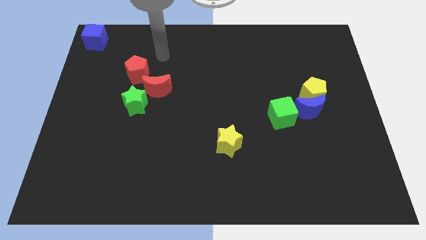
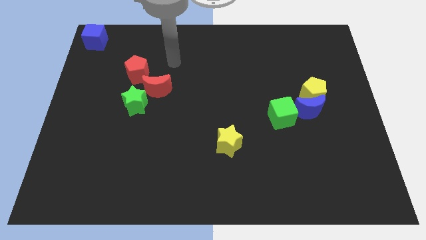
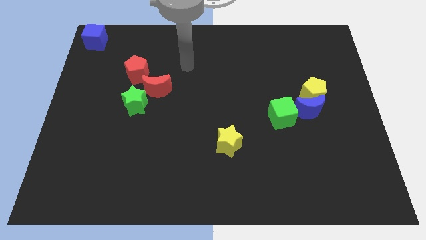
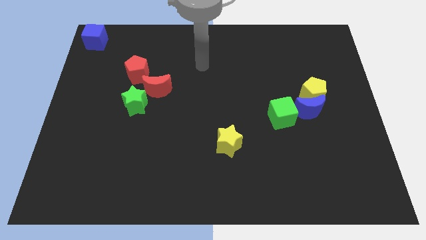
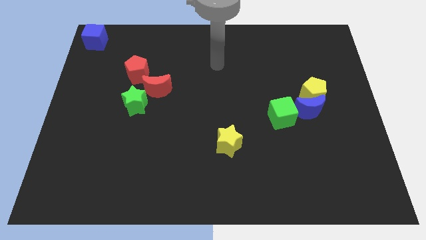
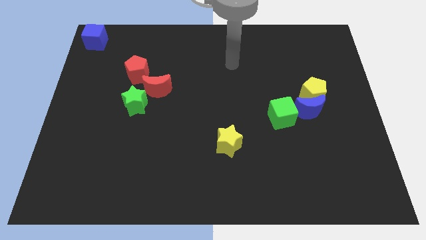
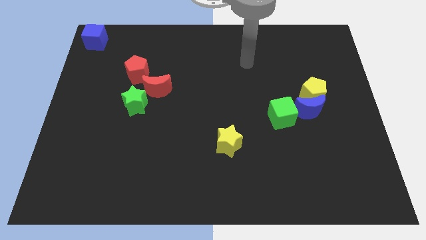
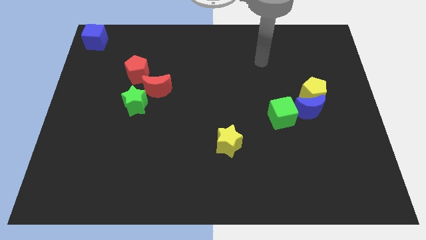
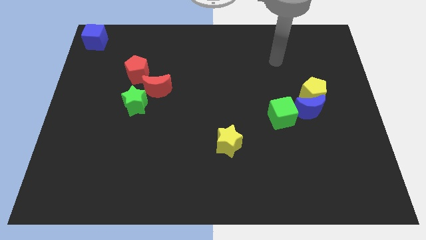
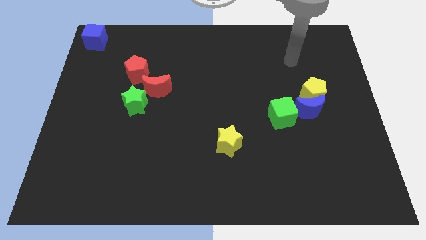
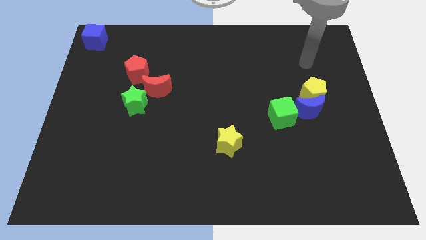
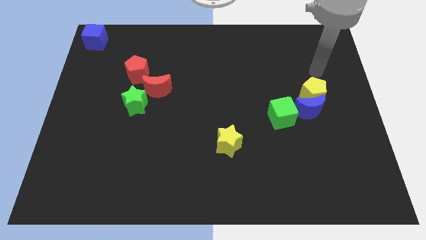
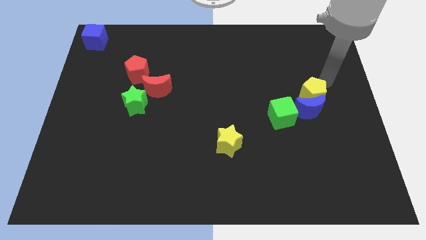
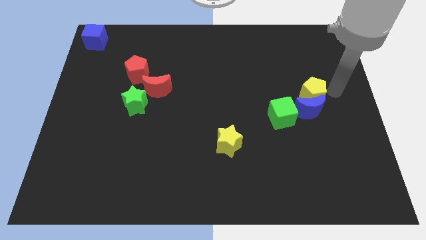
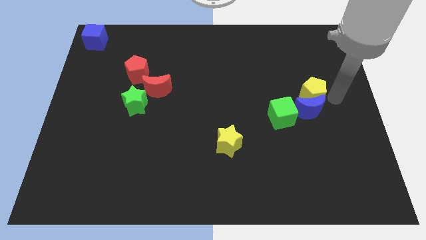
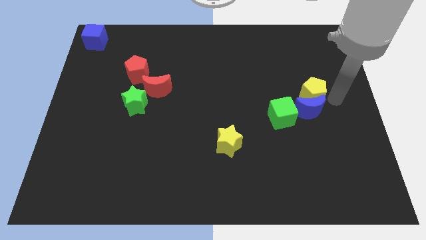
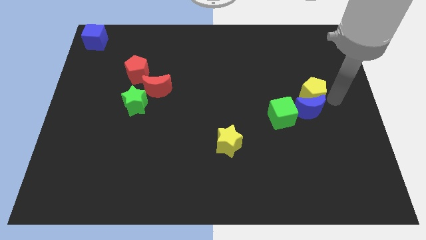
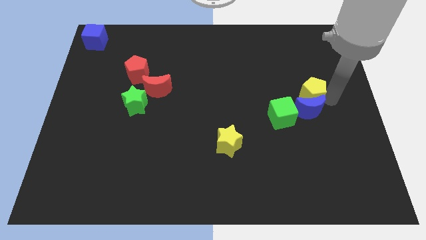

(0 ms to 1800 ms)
move your arm towards the yellow pentagon

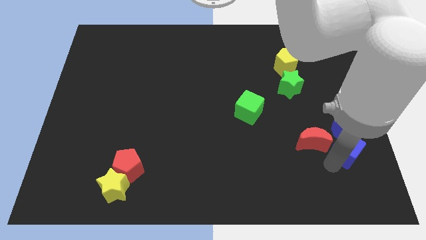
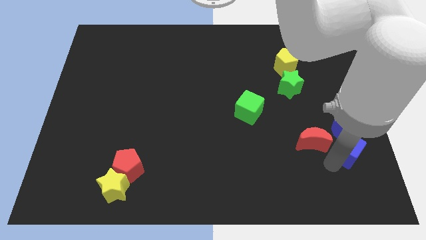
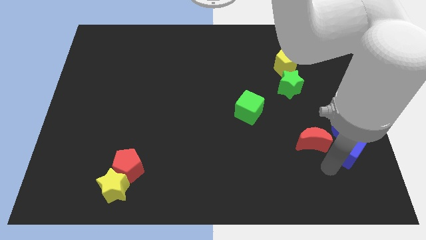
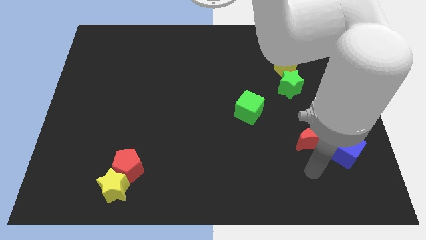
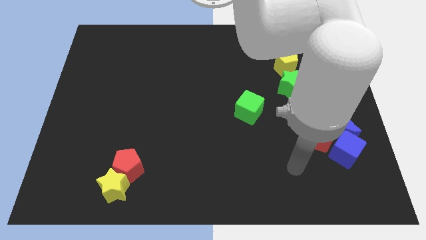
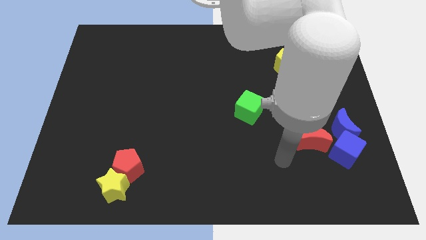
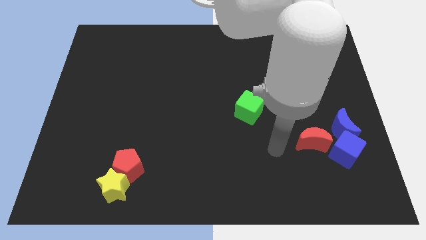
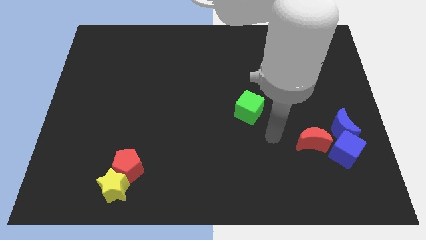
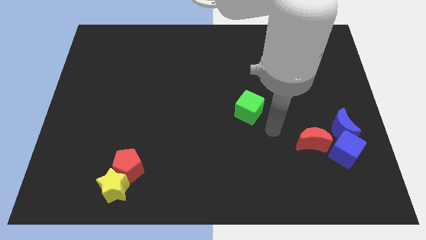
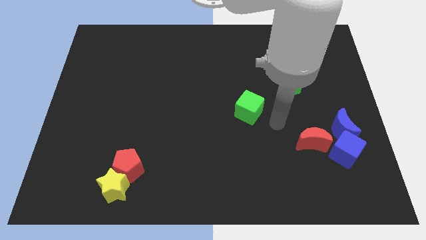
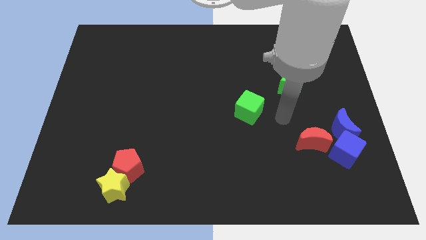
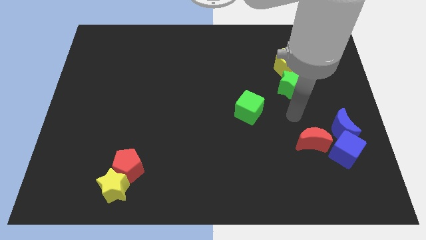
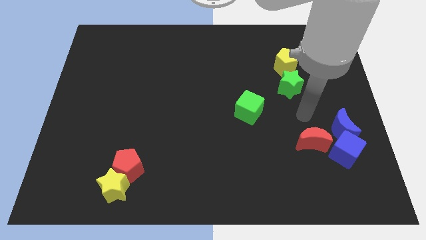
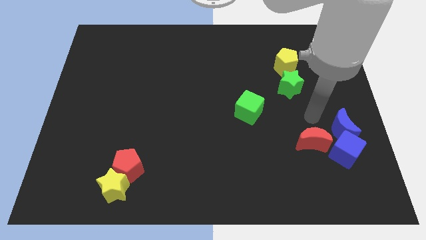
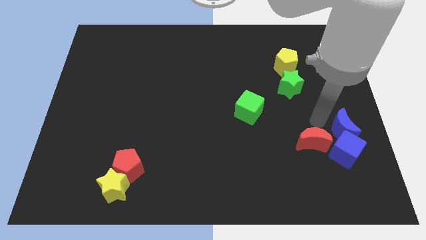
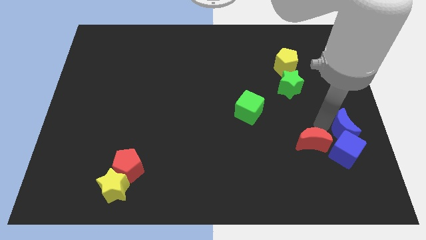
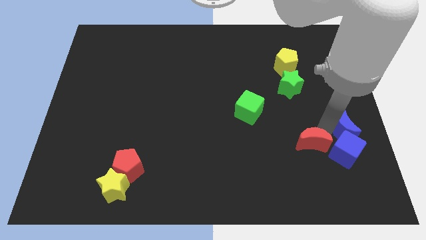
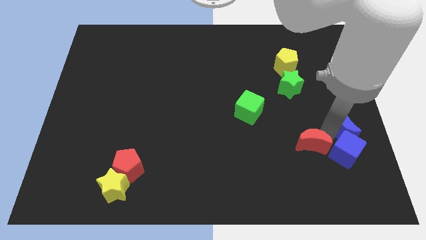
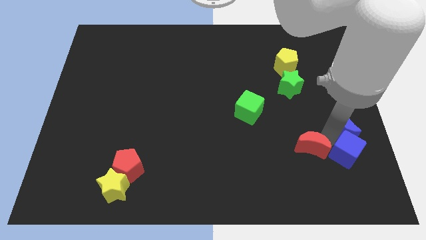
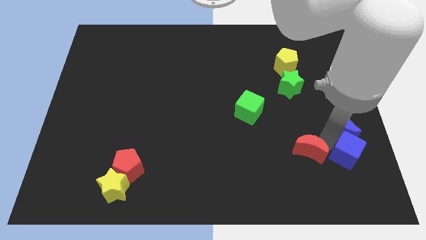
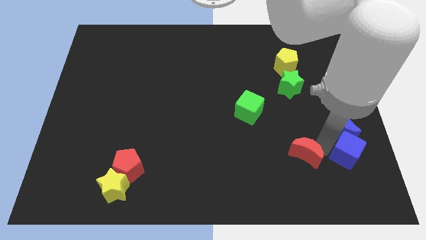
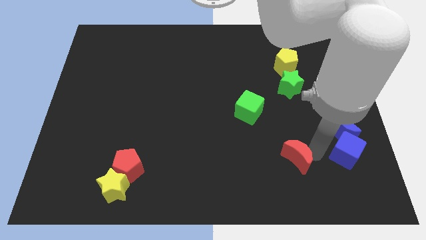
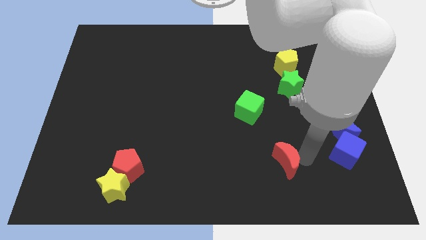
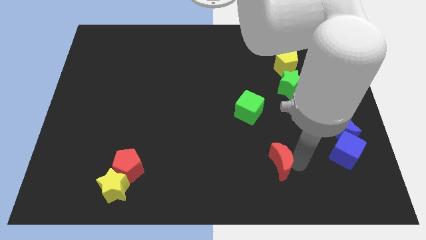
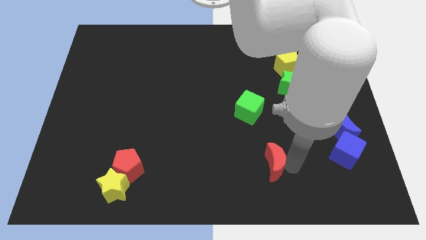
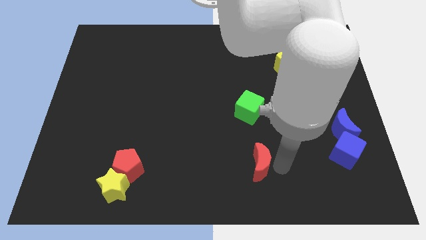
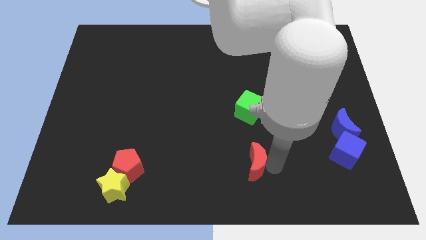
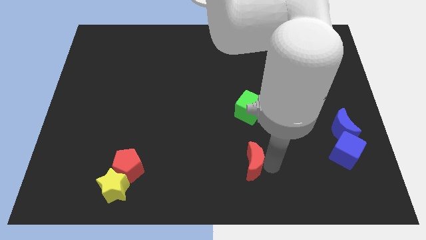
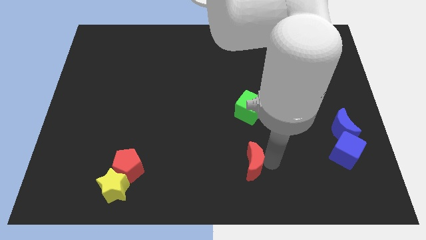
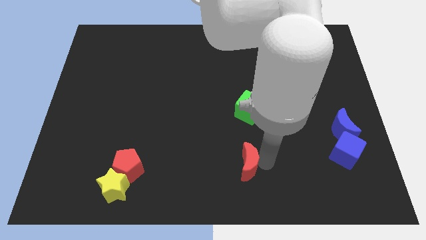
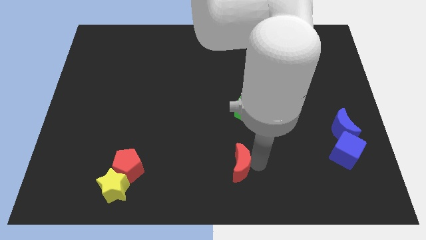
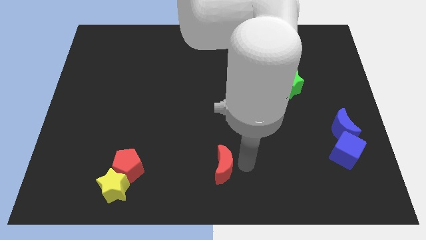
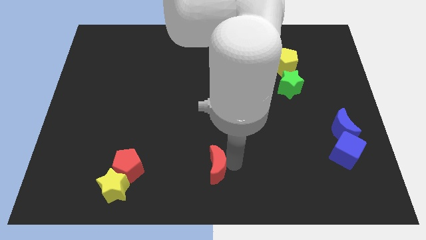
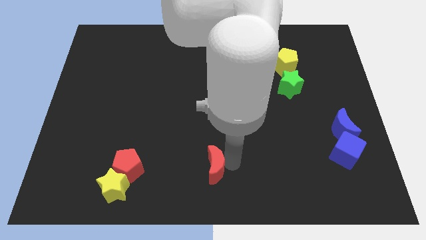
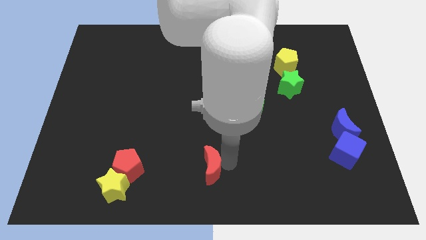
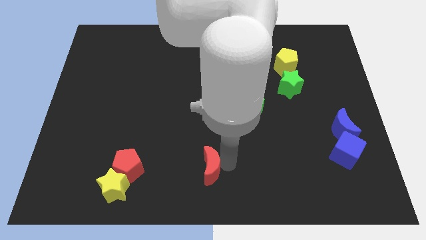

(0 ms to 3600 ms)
drag the red moon diagonally bottom left to the green cube

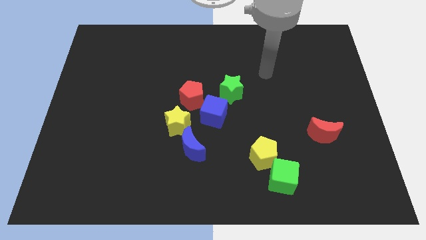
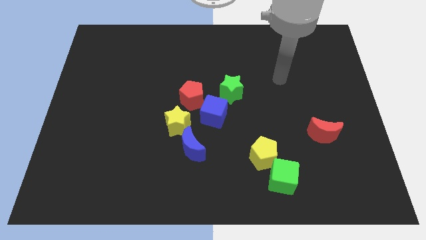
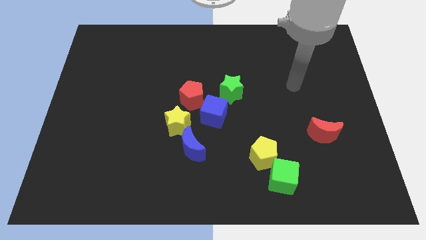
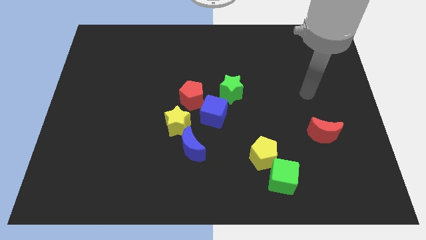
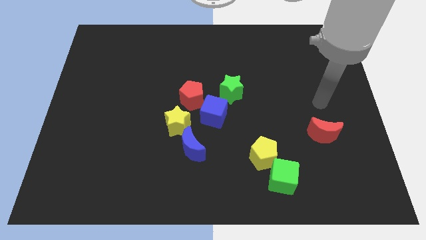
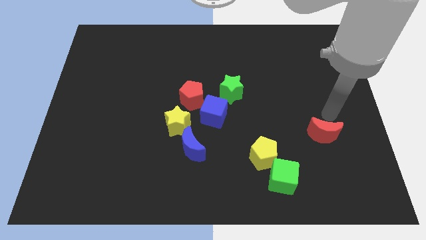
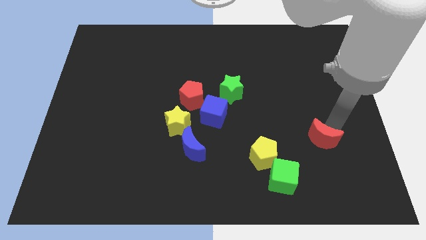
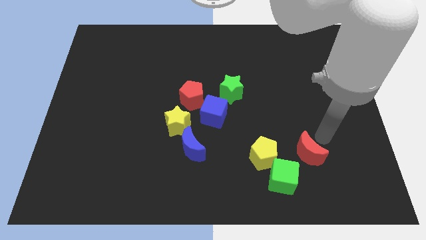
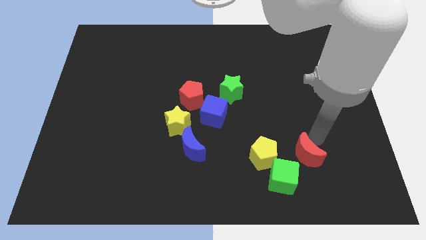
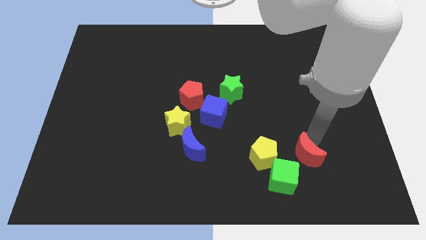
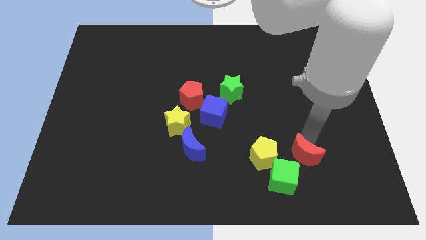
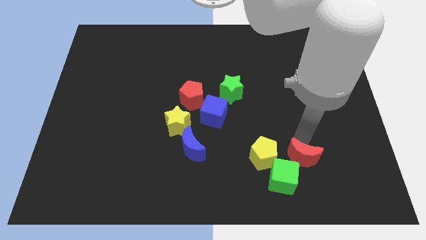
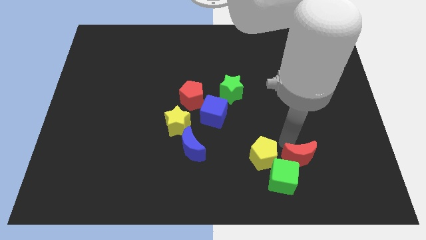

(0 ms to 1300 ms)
place the red moon right to the yellow pentagon

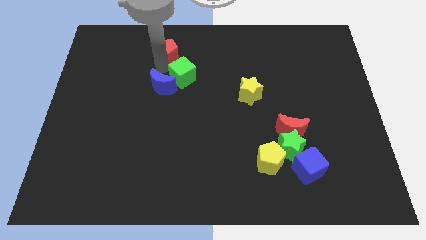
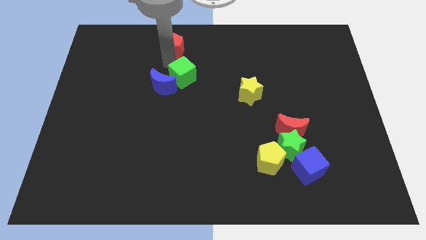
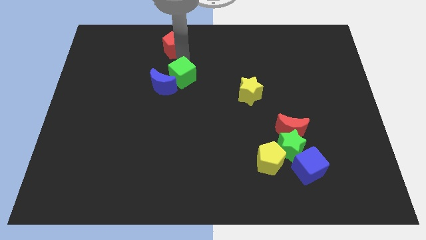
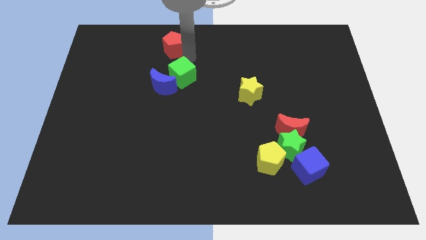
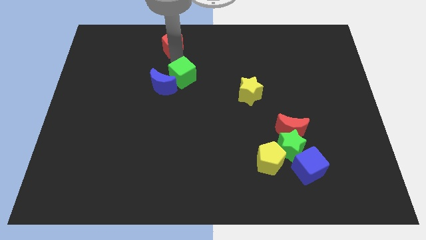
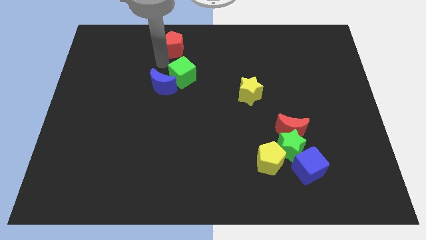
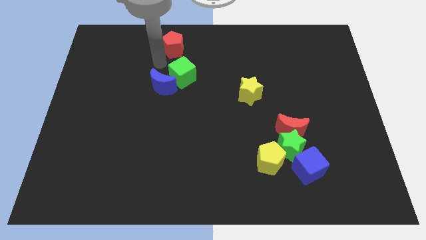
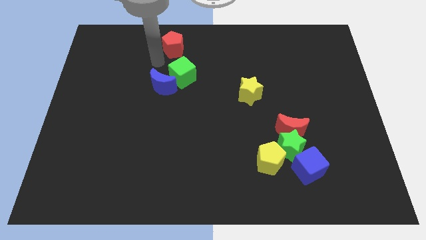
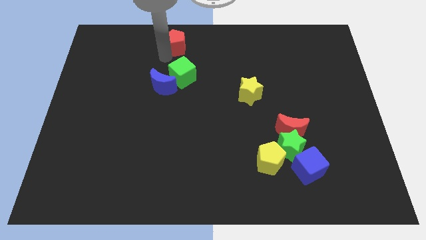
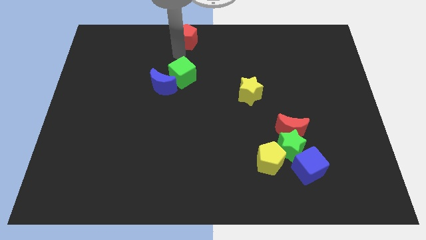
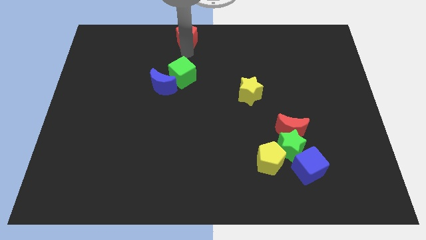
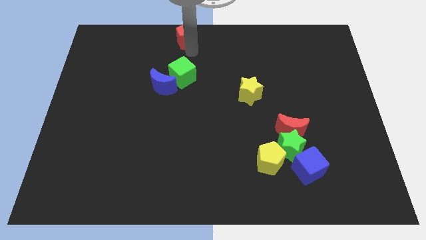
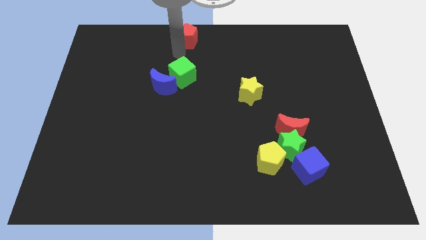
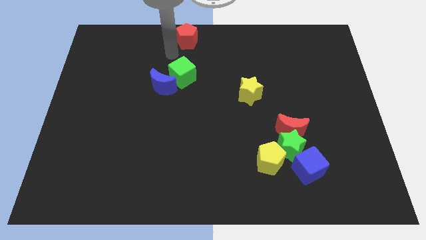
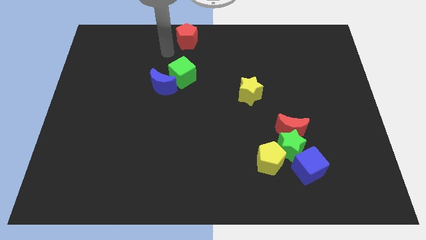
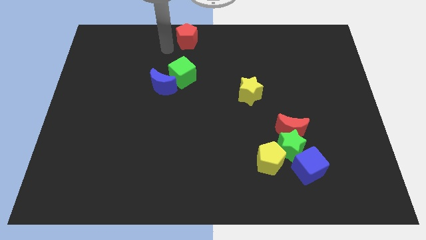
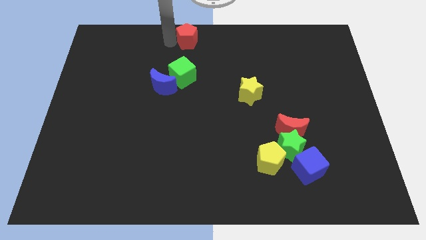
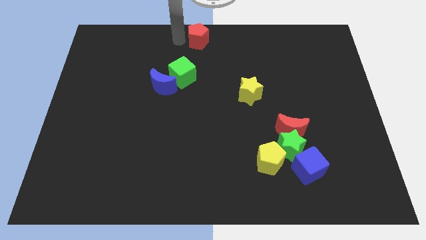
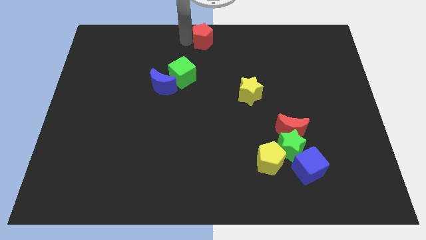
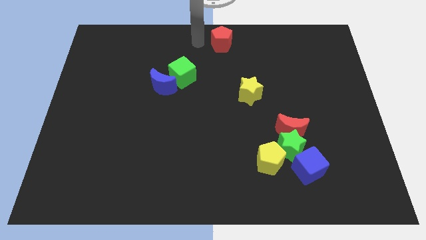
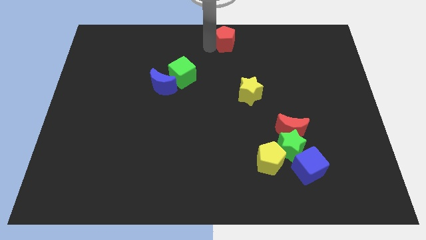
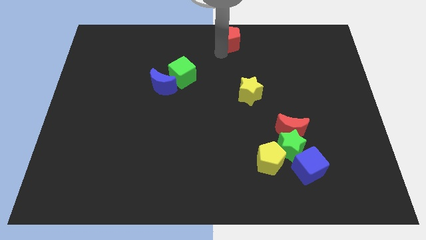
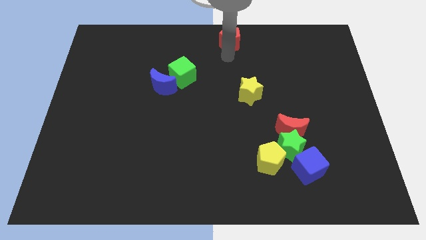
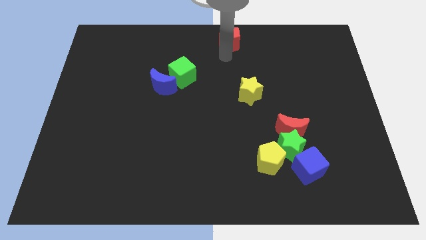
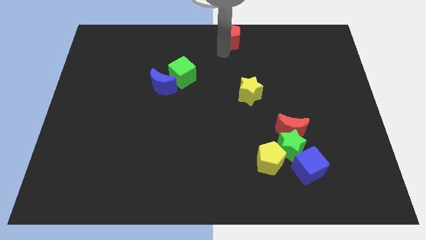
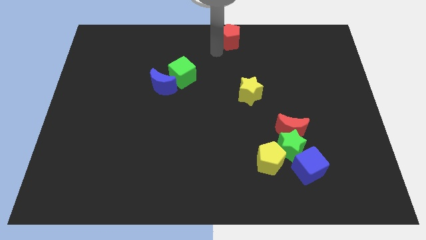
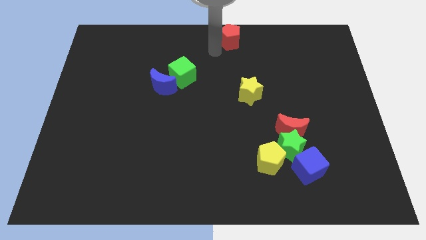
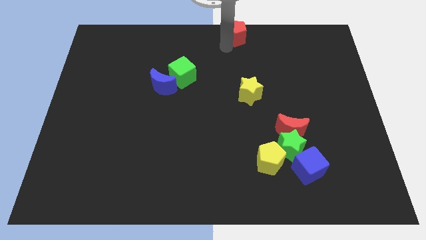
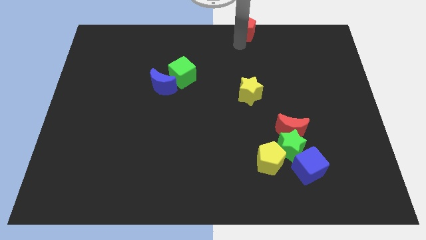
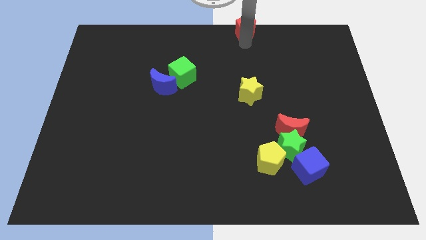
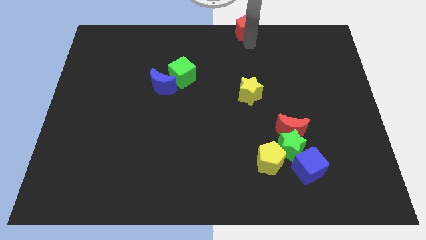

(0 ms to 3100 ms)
separate red pentagon from green cube
